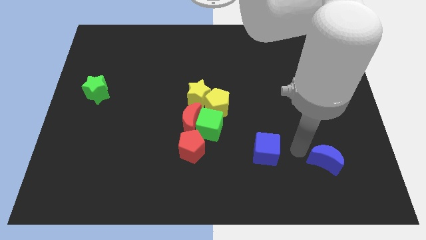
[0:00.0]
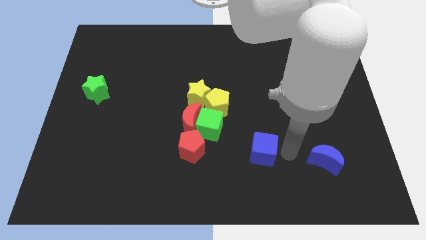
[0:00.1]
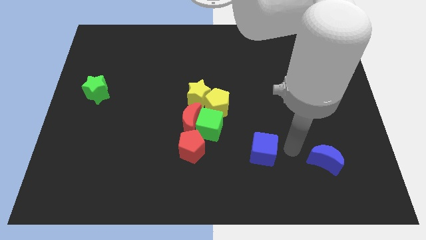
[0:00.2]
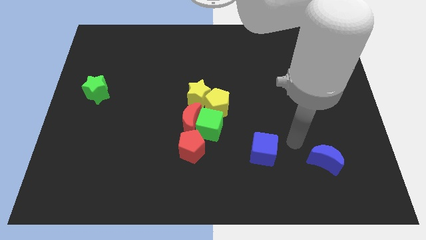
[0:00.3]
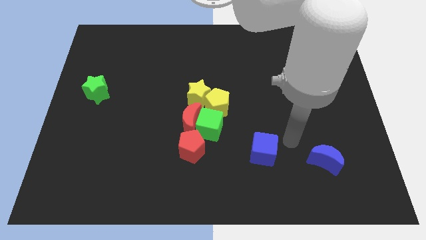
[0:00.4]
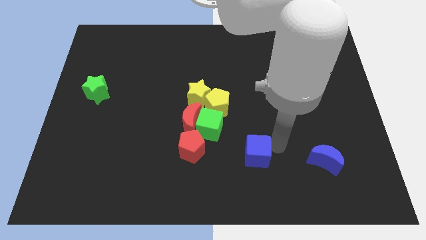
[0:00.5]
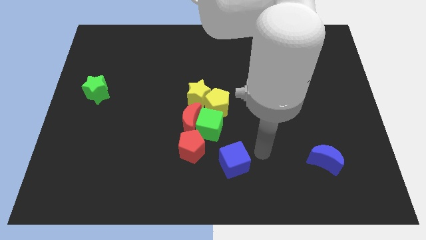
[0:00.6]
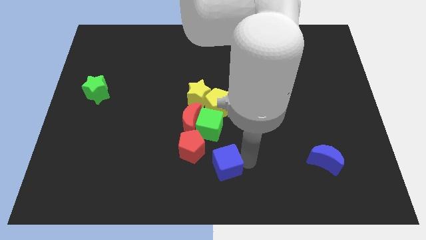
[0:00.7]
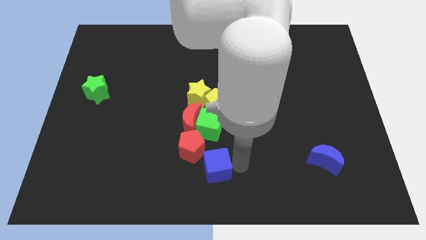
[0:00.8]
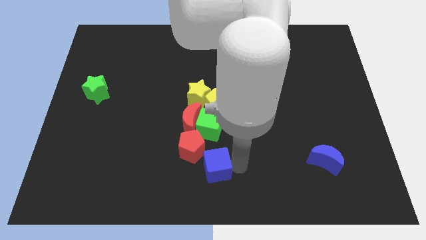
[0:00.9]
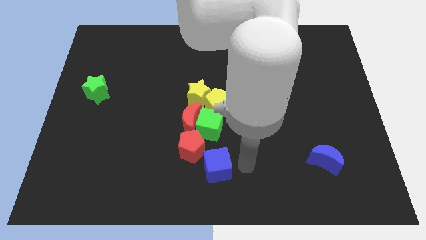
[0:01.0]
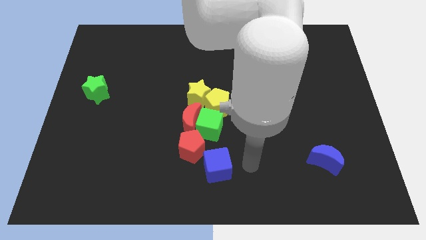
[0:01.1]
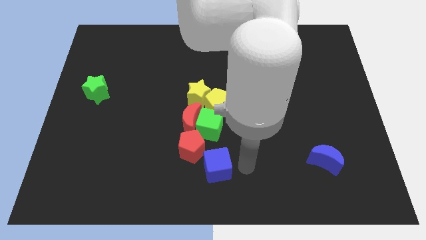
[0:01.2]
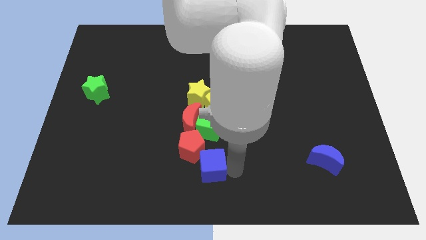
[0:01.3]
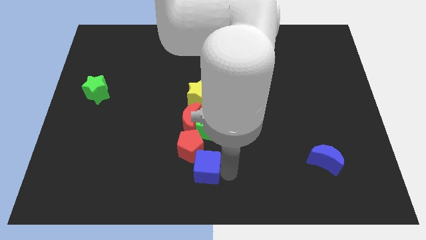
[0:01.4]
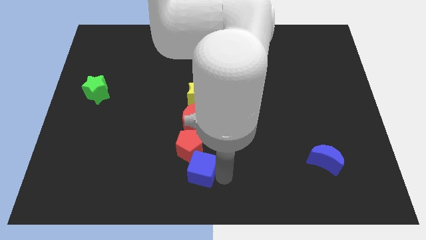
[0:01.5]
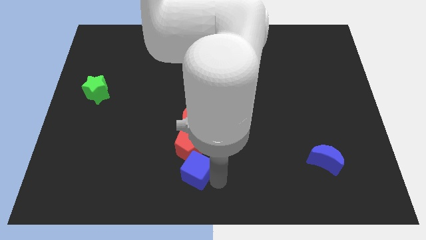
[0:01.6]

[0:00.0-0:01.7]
push the blue cube into red pentagon

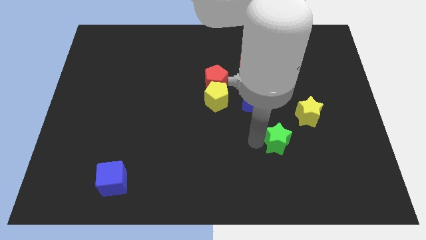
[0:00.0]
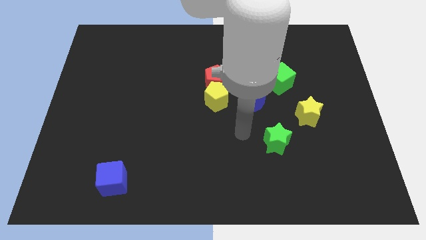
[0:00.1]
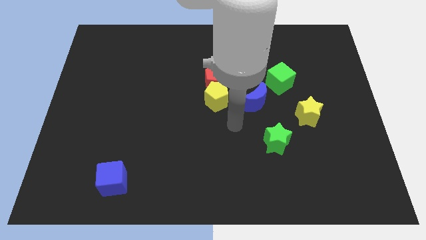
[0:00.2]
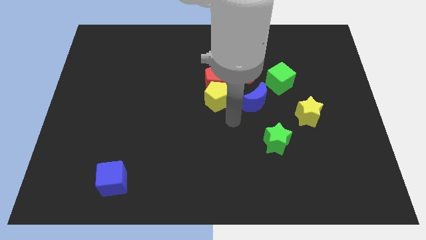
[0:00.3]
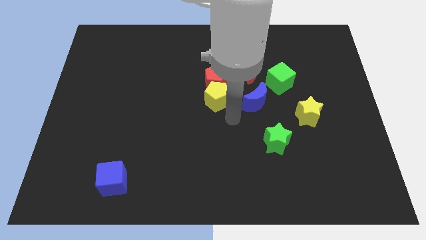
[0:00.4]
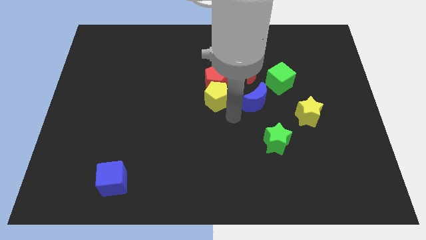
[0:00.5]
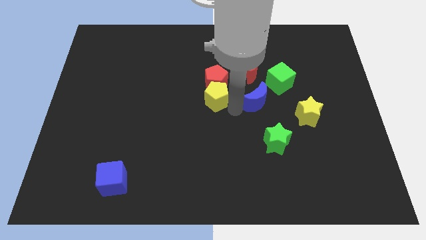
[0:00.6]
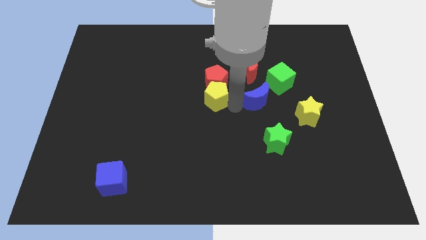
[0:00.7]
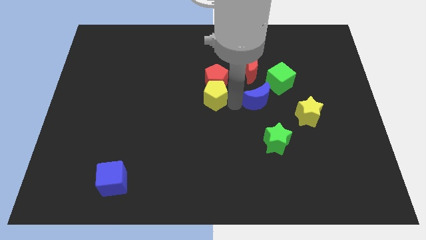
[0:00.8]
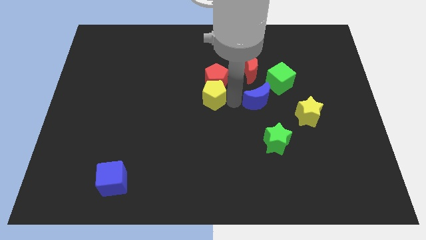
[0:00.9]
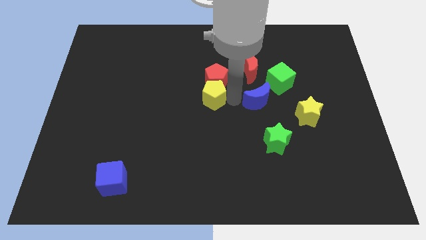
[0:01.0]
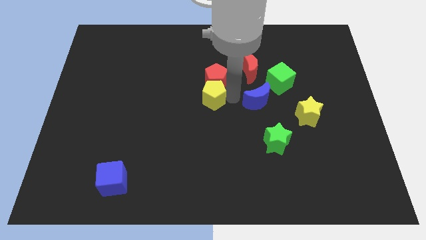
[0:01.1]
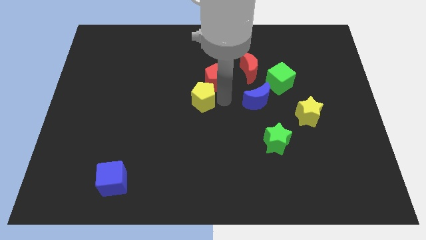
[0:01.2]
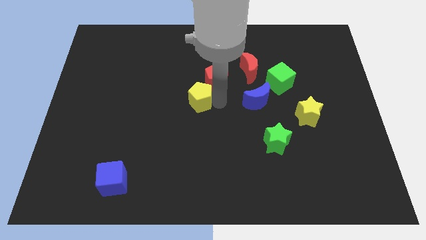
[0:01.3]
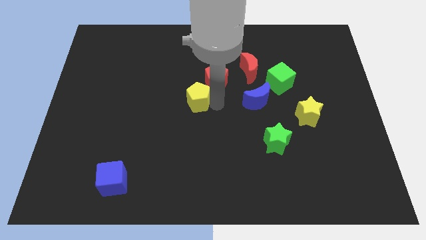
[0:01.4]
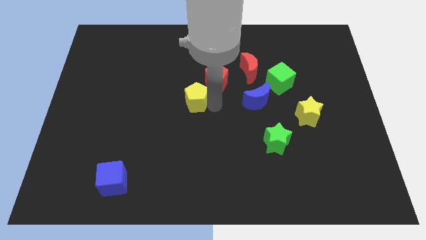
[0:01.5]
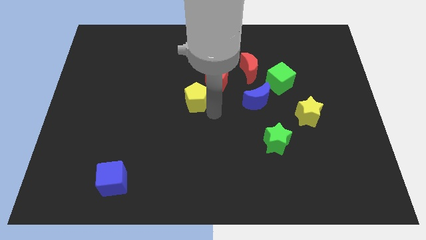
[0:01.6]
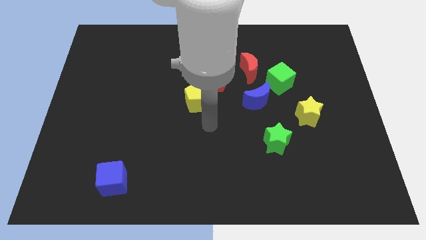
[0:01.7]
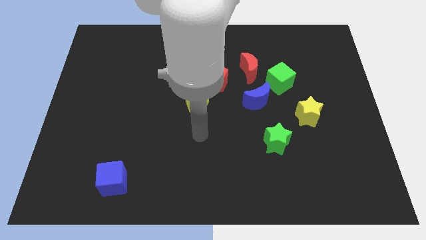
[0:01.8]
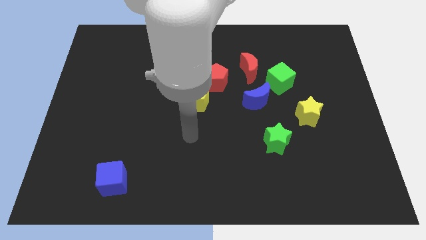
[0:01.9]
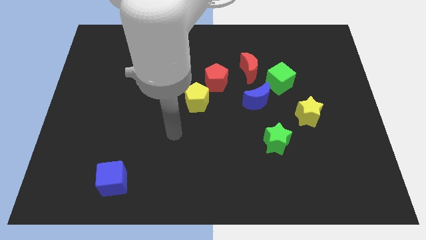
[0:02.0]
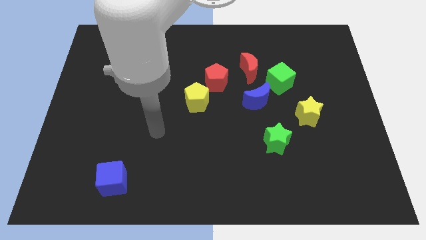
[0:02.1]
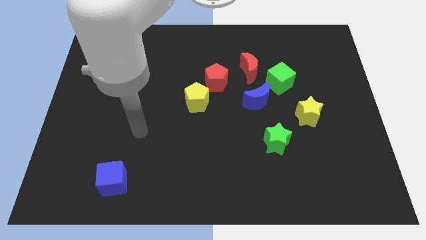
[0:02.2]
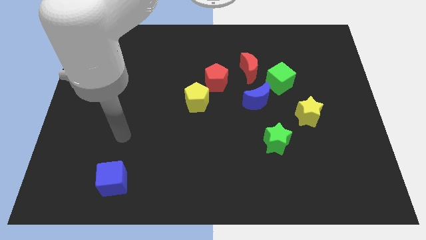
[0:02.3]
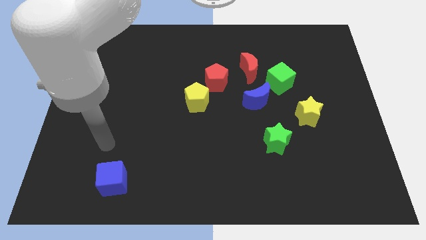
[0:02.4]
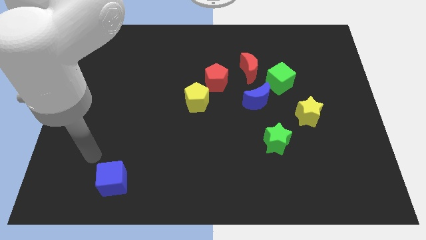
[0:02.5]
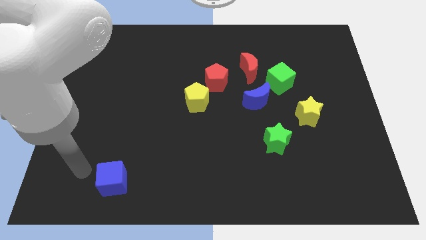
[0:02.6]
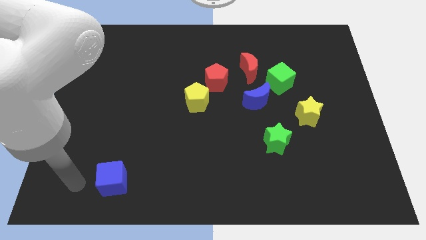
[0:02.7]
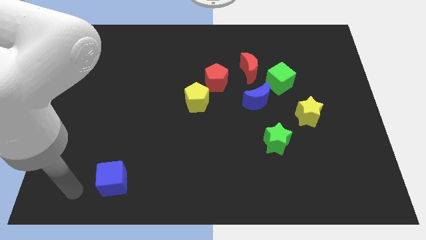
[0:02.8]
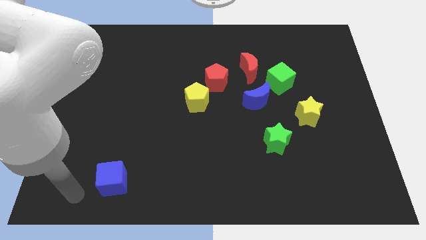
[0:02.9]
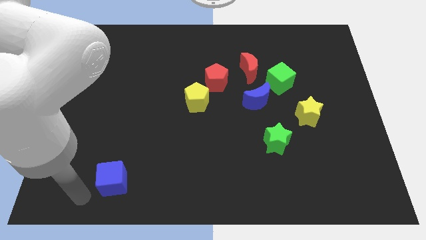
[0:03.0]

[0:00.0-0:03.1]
slightly move the yellow pentagon towards the left

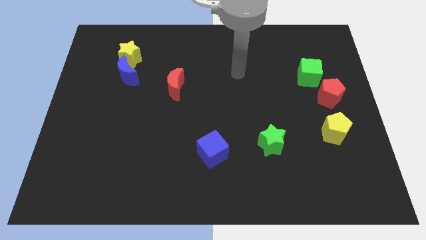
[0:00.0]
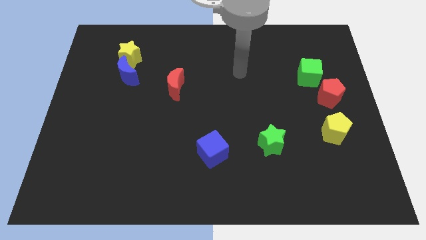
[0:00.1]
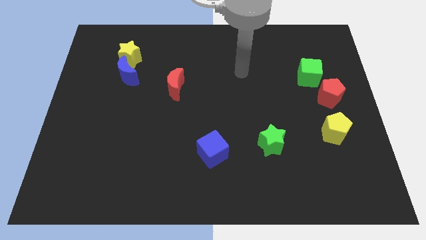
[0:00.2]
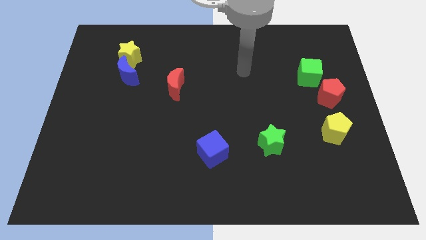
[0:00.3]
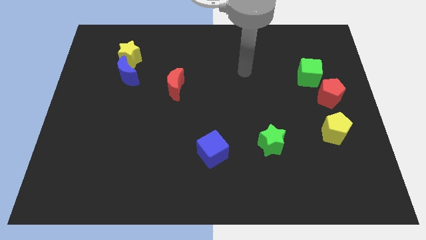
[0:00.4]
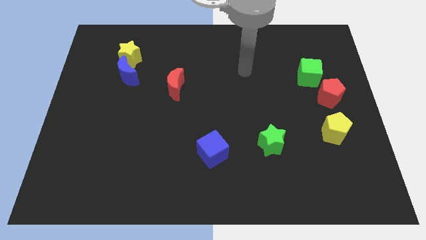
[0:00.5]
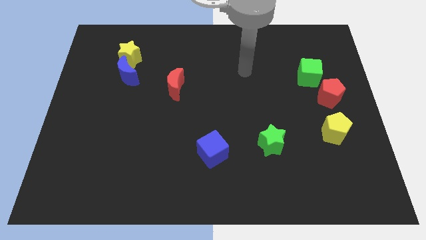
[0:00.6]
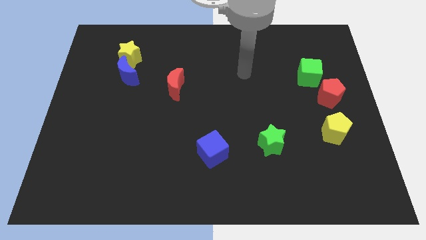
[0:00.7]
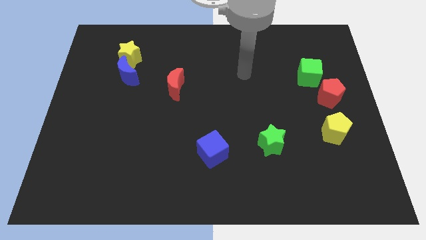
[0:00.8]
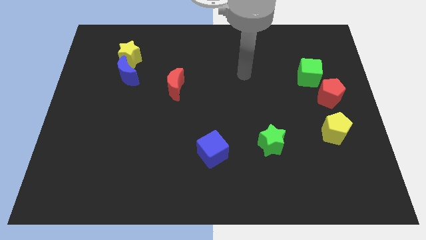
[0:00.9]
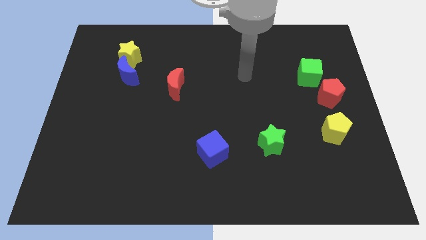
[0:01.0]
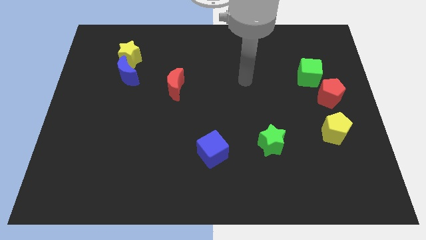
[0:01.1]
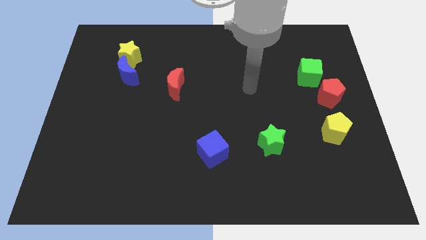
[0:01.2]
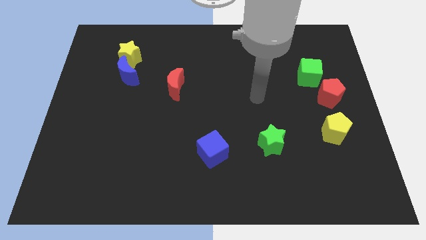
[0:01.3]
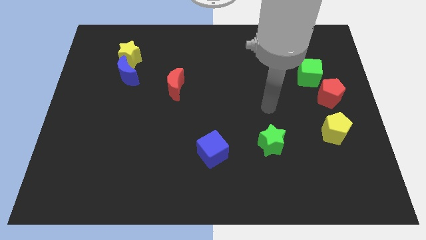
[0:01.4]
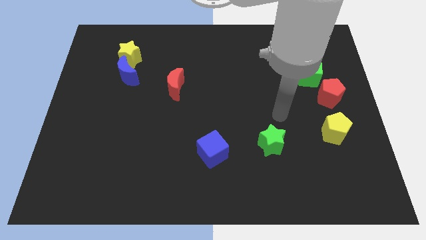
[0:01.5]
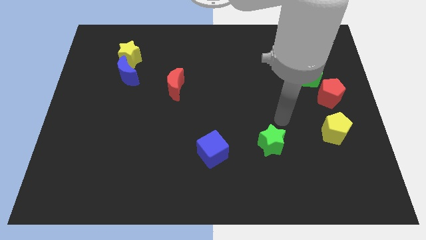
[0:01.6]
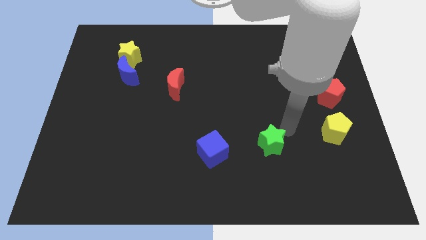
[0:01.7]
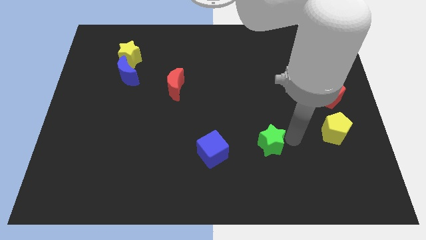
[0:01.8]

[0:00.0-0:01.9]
move arm right to the green star

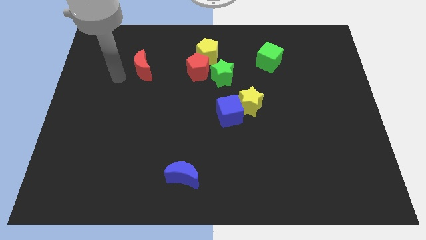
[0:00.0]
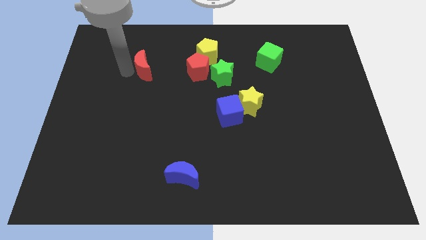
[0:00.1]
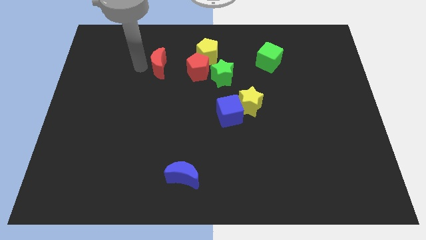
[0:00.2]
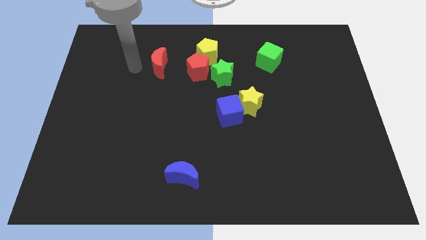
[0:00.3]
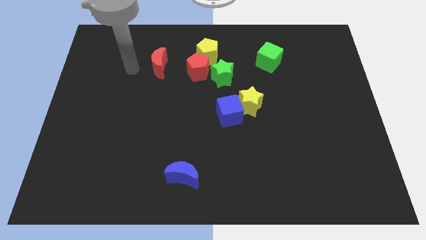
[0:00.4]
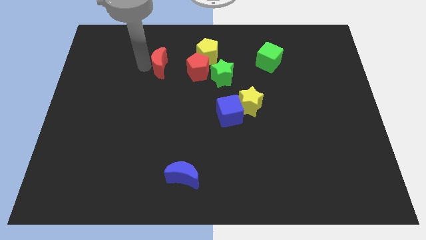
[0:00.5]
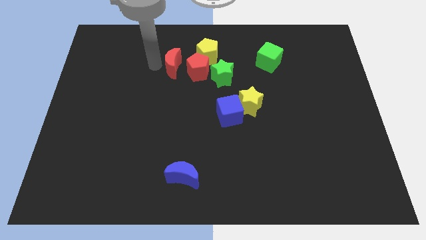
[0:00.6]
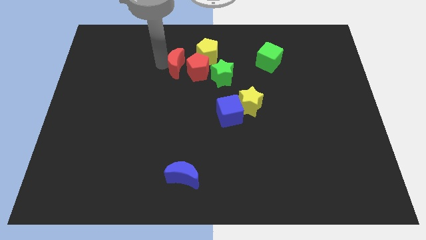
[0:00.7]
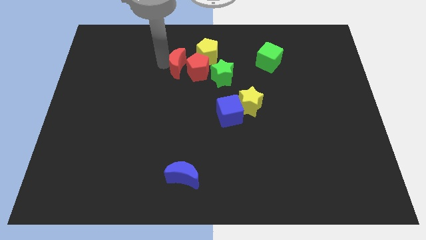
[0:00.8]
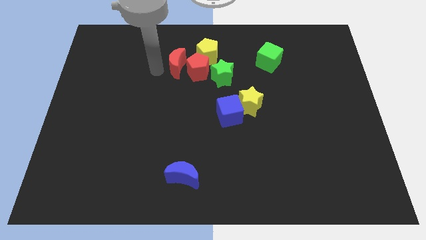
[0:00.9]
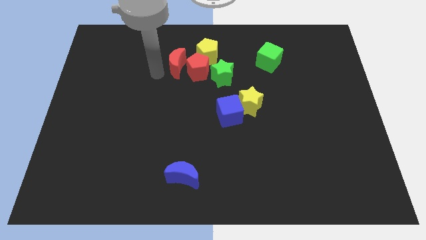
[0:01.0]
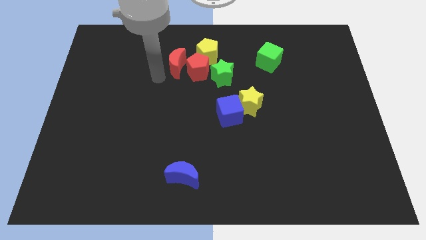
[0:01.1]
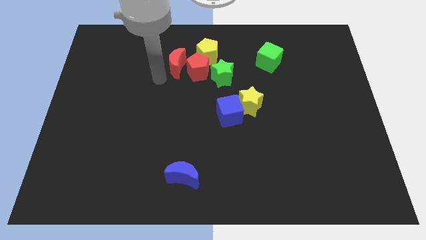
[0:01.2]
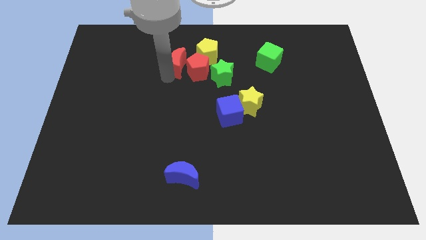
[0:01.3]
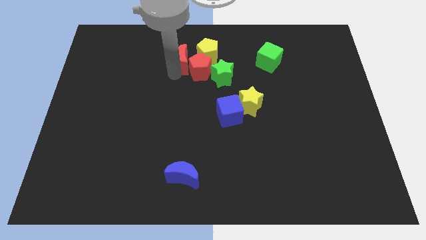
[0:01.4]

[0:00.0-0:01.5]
push the red moon into the red pentagon

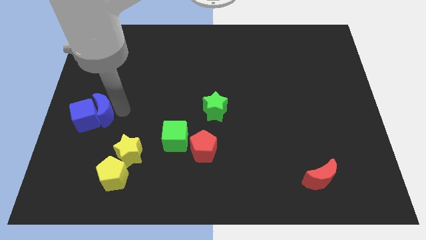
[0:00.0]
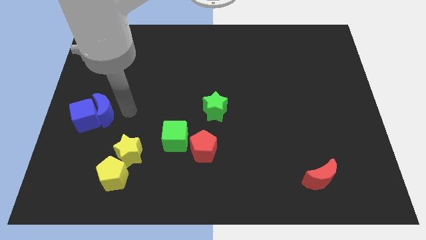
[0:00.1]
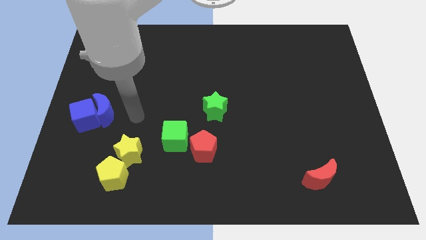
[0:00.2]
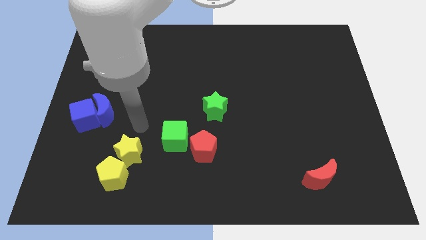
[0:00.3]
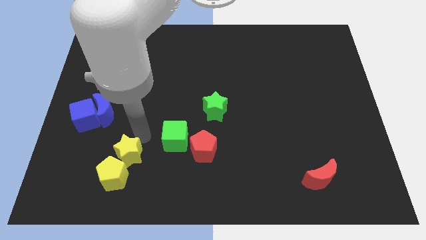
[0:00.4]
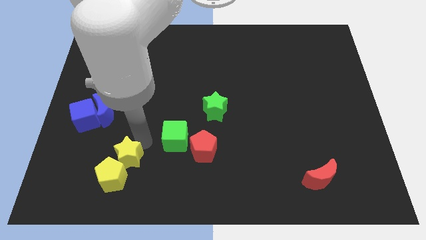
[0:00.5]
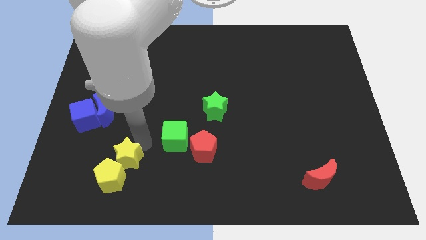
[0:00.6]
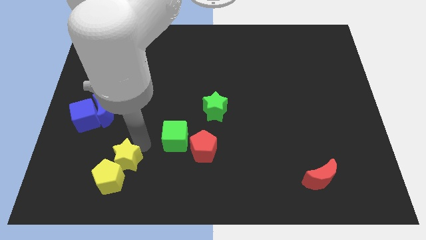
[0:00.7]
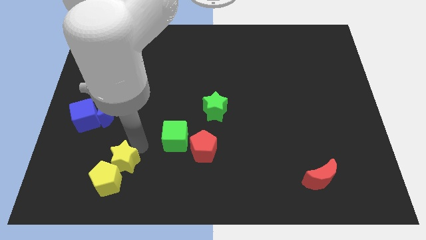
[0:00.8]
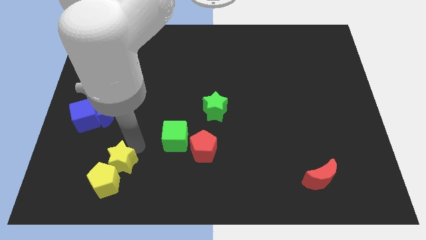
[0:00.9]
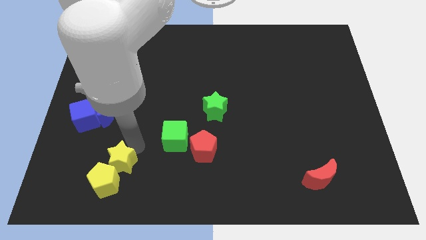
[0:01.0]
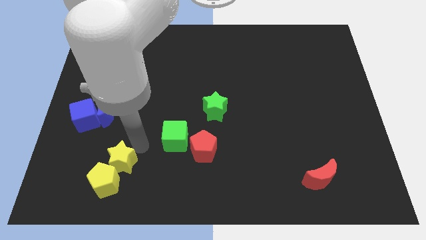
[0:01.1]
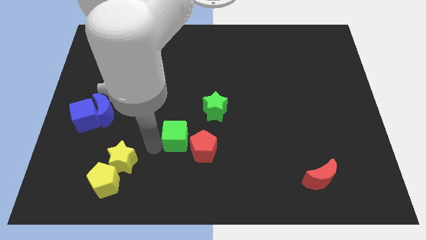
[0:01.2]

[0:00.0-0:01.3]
push the yellow star slightly towards the yellow pentagon
